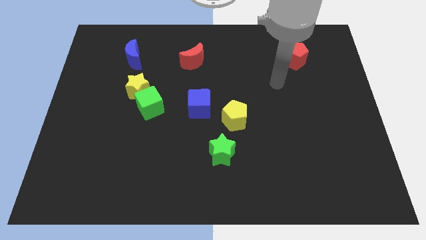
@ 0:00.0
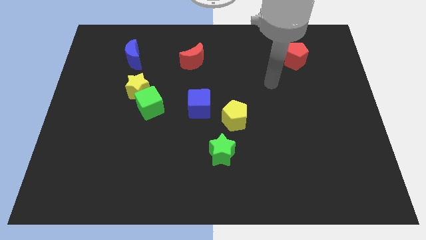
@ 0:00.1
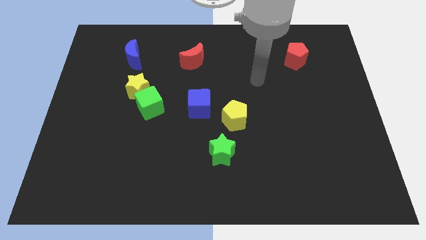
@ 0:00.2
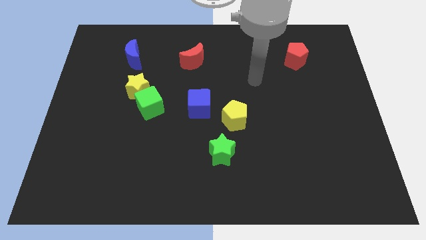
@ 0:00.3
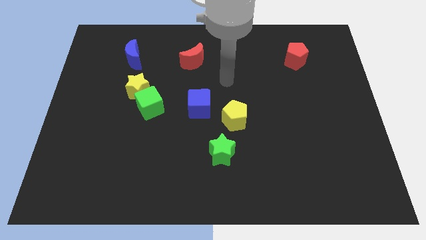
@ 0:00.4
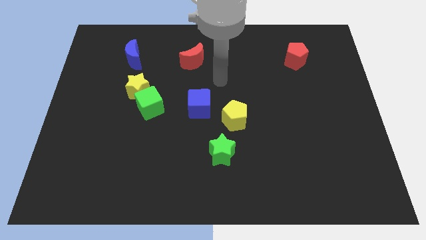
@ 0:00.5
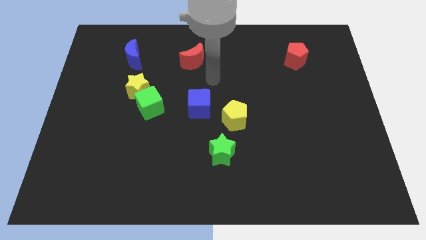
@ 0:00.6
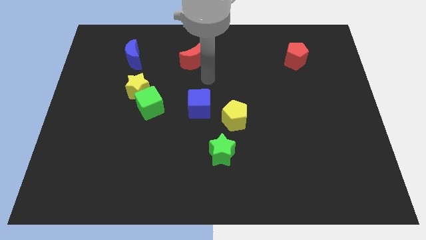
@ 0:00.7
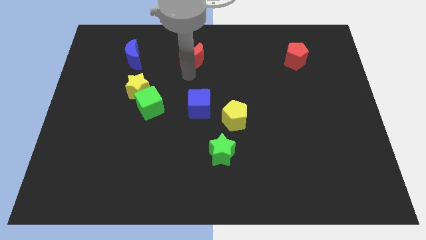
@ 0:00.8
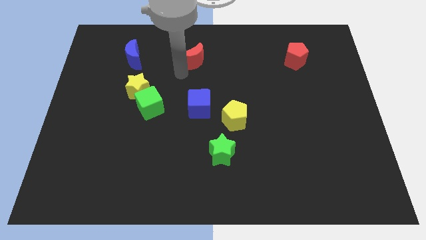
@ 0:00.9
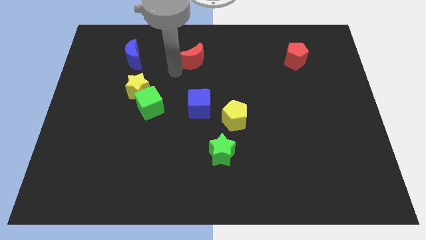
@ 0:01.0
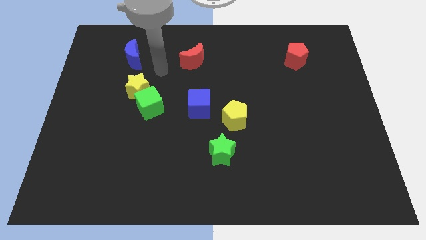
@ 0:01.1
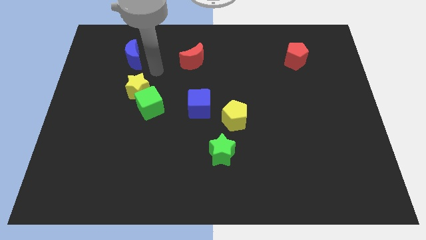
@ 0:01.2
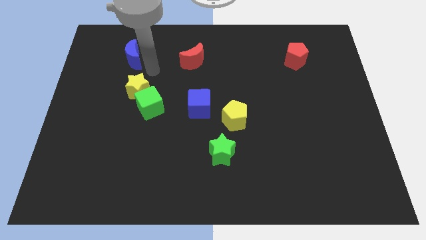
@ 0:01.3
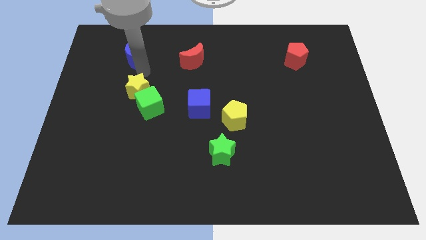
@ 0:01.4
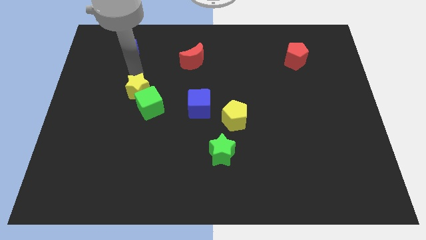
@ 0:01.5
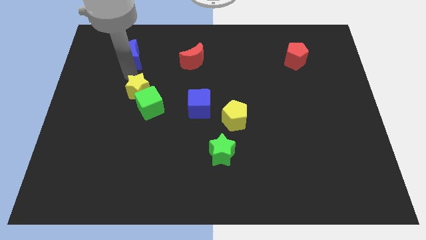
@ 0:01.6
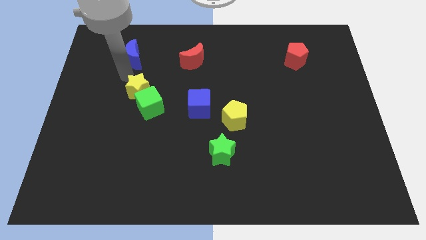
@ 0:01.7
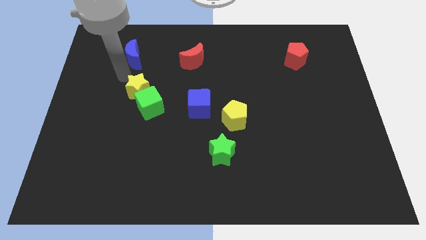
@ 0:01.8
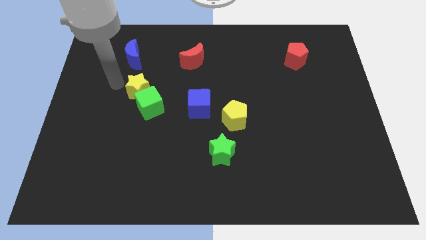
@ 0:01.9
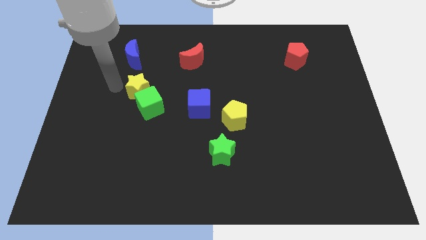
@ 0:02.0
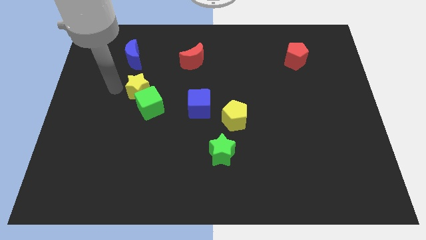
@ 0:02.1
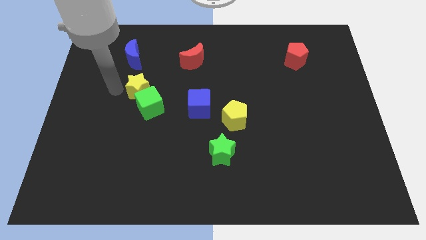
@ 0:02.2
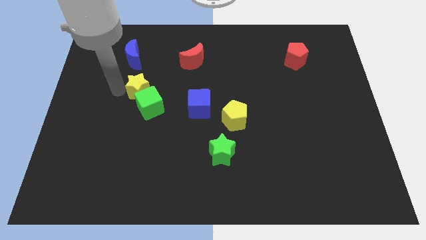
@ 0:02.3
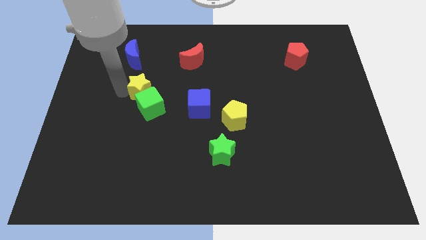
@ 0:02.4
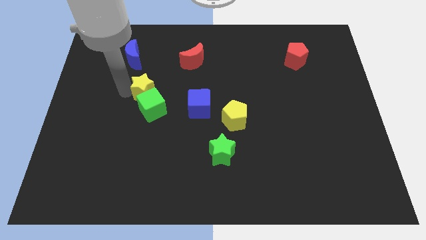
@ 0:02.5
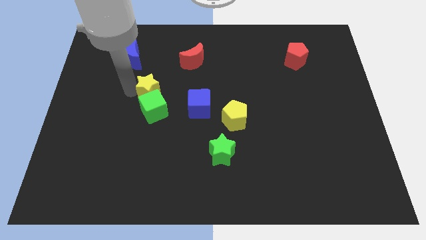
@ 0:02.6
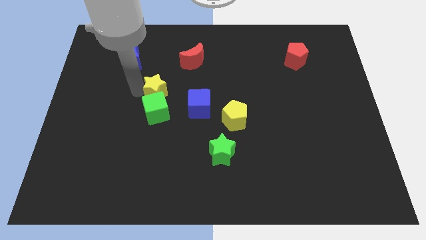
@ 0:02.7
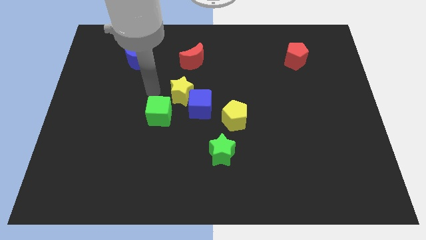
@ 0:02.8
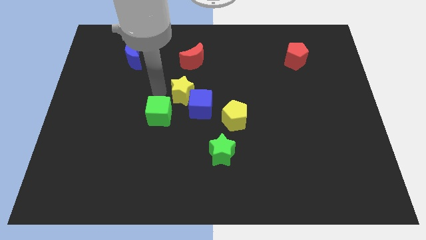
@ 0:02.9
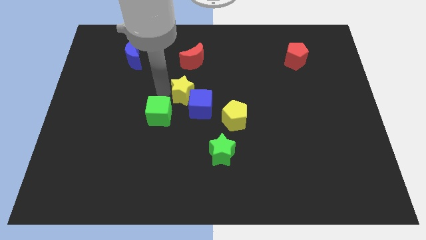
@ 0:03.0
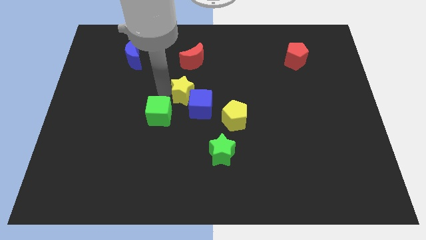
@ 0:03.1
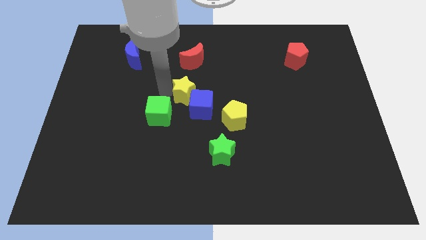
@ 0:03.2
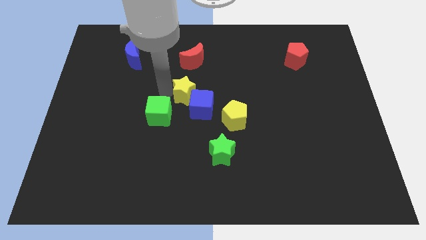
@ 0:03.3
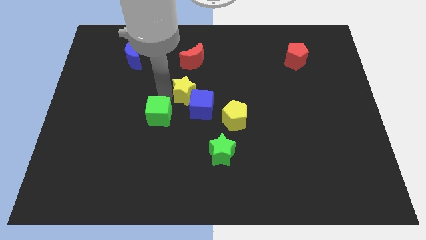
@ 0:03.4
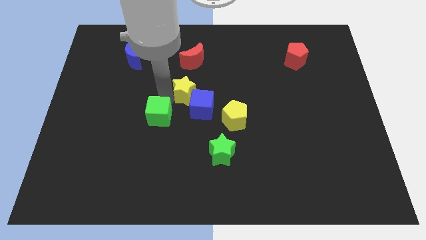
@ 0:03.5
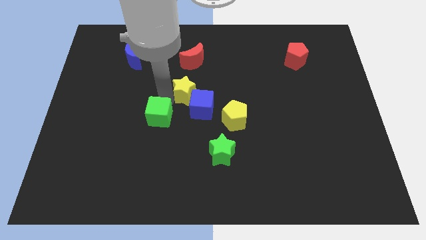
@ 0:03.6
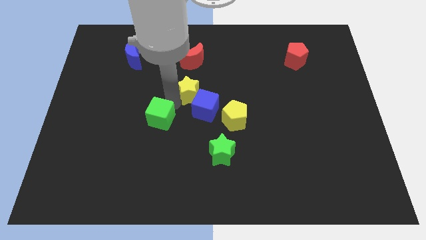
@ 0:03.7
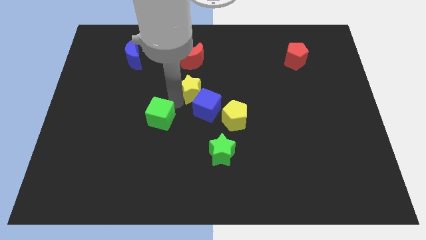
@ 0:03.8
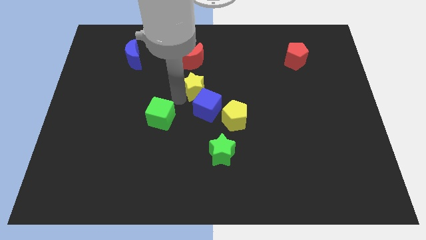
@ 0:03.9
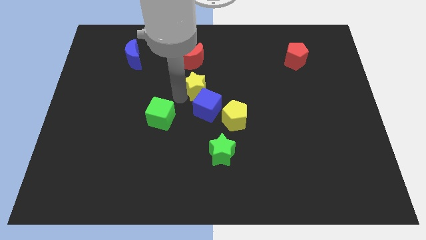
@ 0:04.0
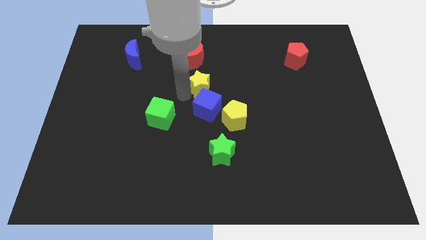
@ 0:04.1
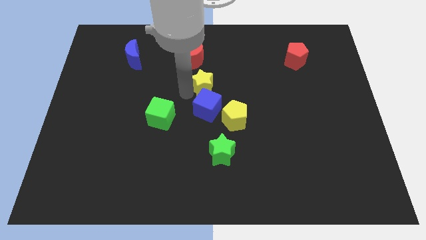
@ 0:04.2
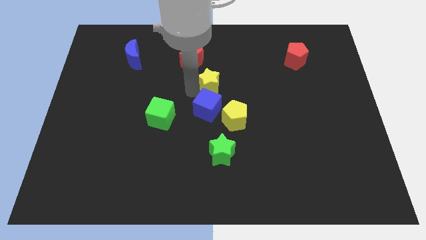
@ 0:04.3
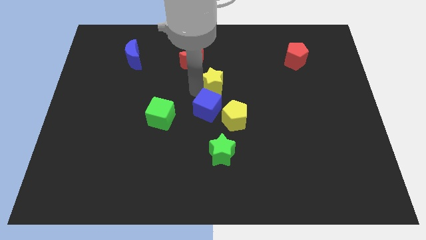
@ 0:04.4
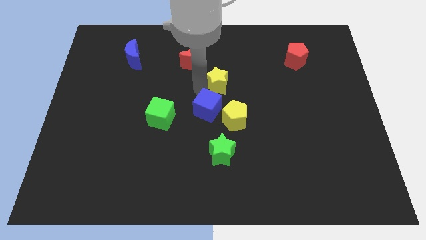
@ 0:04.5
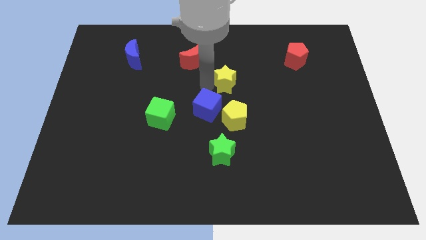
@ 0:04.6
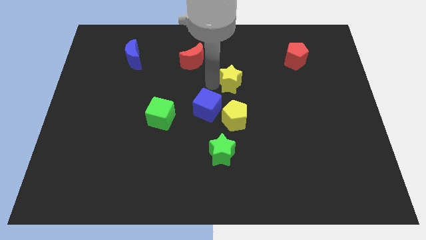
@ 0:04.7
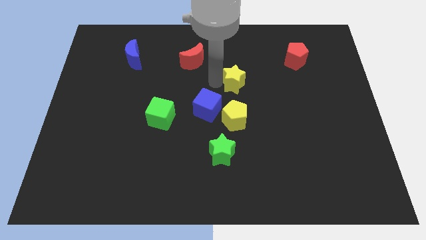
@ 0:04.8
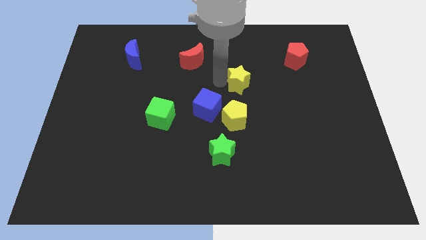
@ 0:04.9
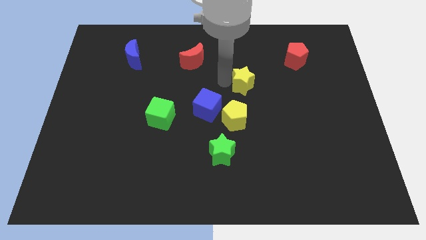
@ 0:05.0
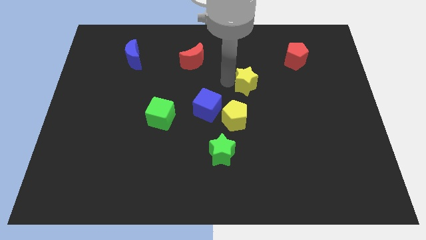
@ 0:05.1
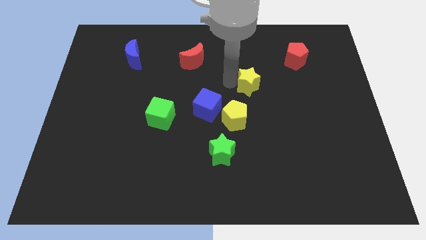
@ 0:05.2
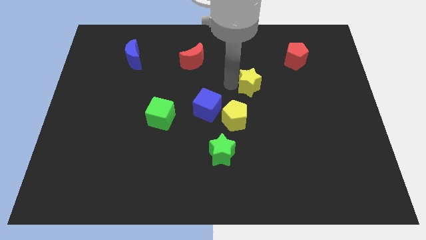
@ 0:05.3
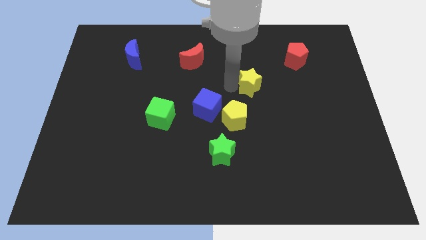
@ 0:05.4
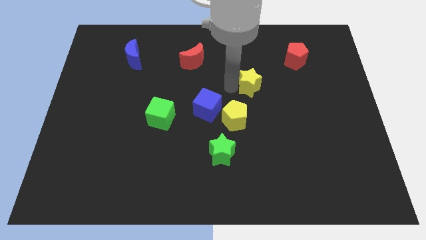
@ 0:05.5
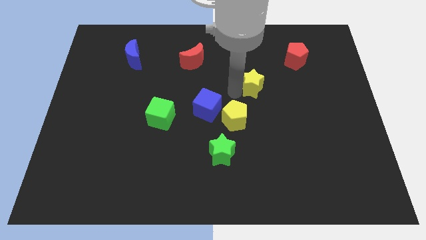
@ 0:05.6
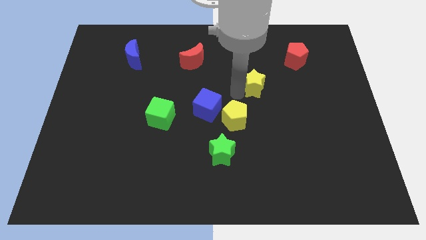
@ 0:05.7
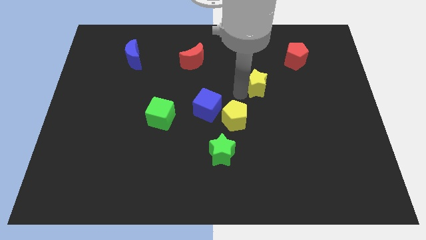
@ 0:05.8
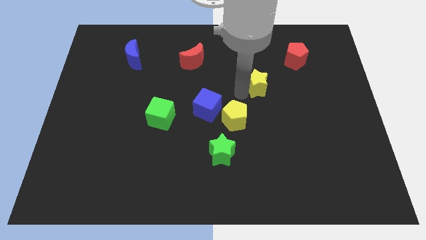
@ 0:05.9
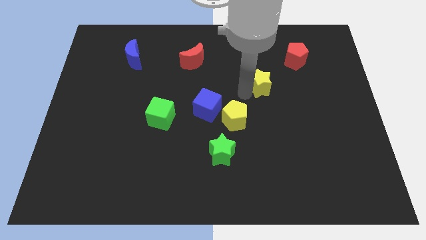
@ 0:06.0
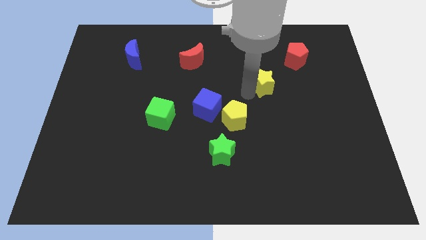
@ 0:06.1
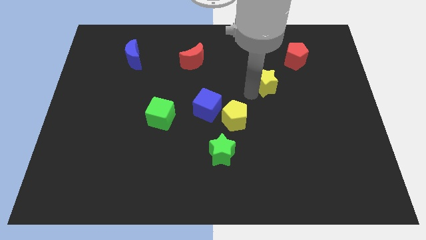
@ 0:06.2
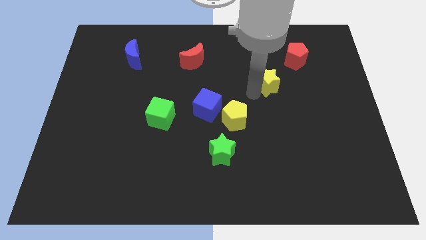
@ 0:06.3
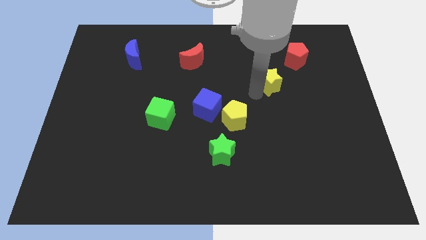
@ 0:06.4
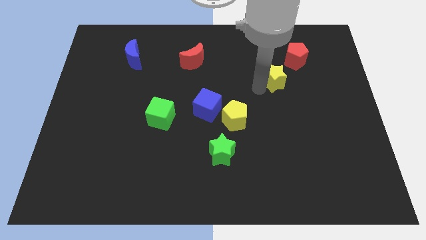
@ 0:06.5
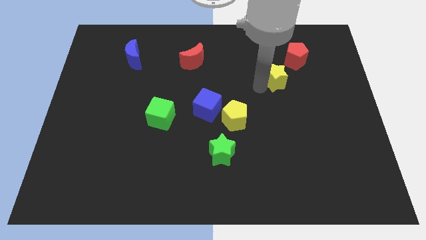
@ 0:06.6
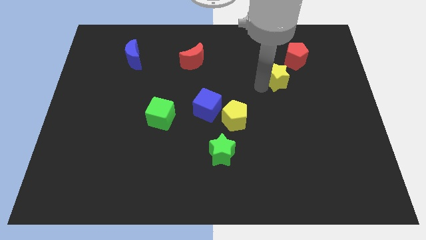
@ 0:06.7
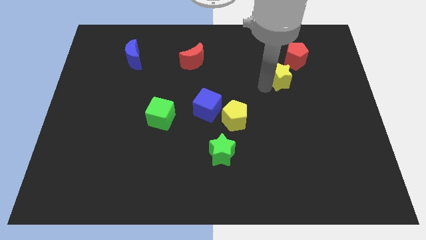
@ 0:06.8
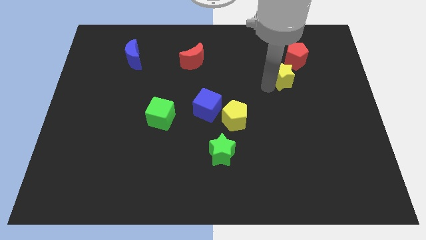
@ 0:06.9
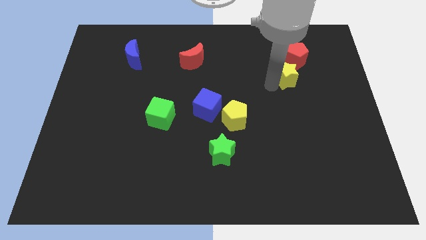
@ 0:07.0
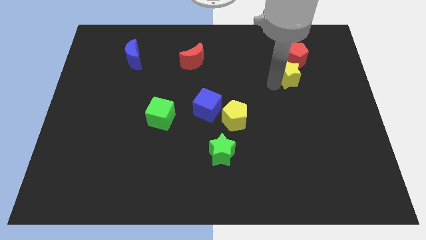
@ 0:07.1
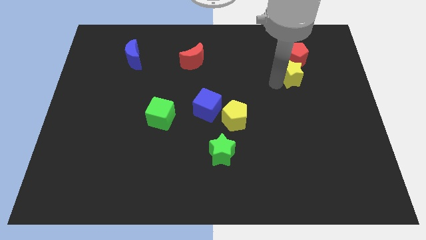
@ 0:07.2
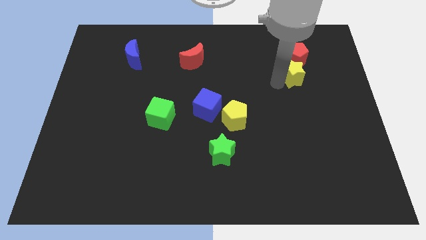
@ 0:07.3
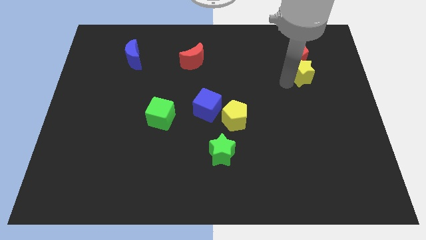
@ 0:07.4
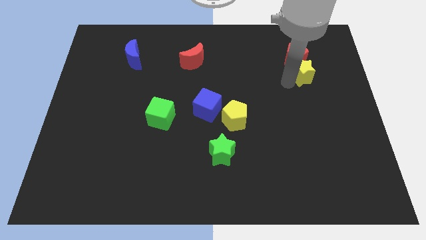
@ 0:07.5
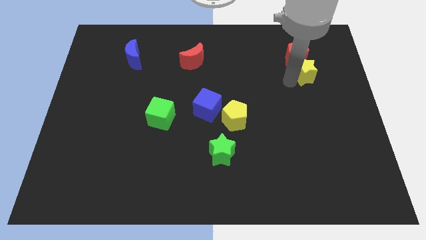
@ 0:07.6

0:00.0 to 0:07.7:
slide the yellow star close to the red pentagon

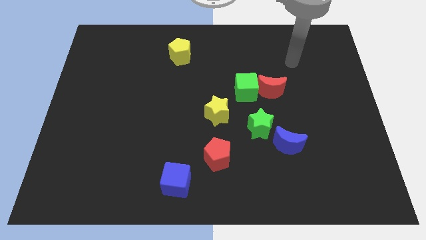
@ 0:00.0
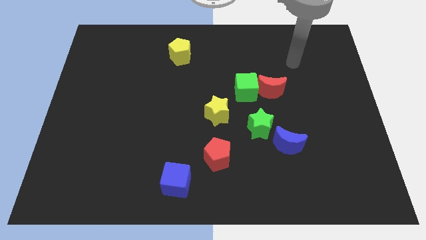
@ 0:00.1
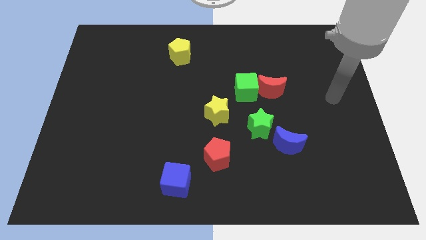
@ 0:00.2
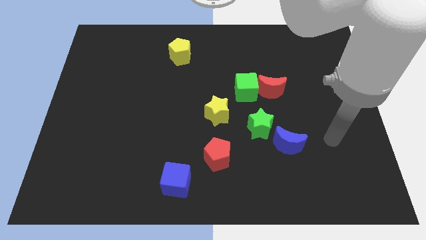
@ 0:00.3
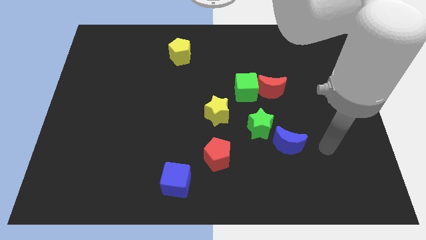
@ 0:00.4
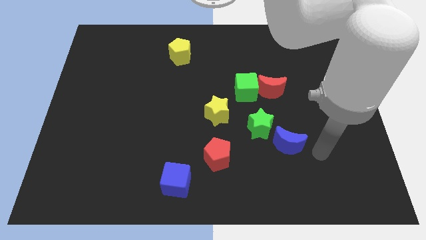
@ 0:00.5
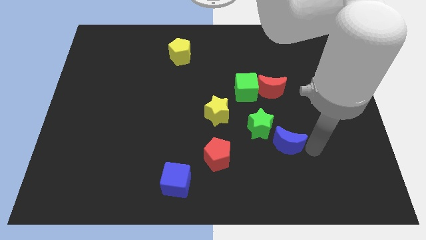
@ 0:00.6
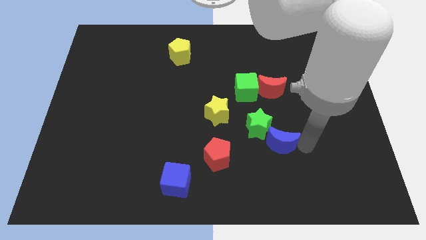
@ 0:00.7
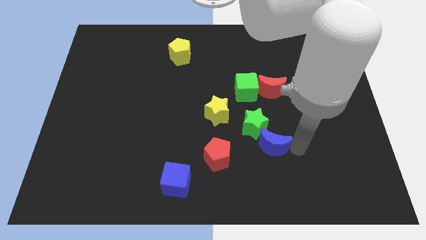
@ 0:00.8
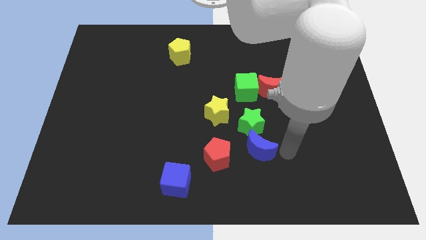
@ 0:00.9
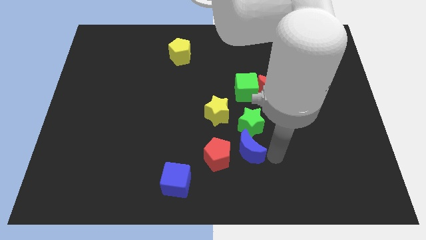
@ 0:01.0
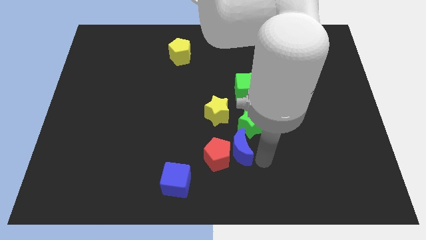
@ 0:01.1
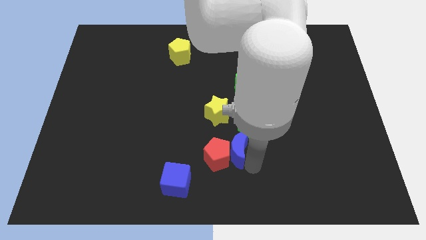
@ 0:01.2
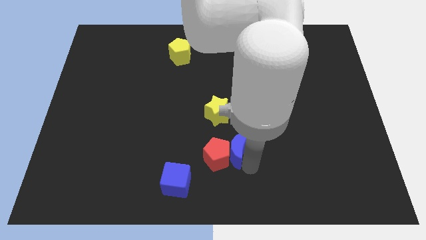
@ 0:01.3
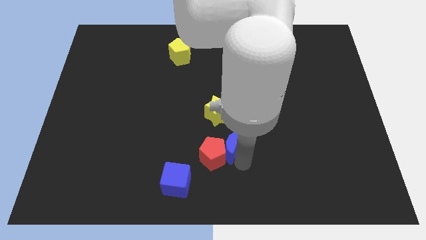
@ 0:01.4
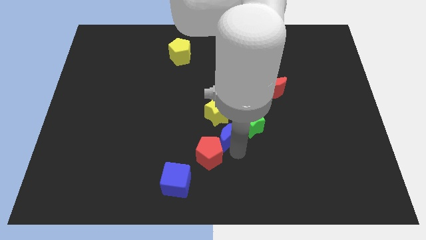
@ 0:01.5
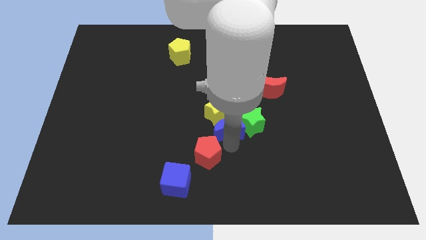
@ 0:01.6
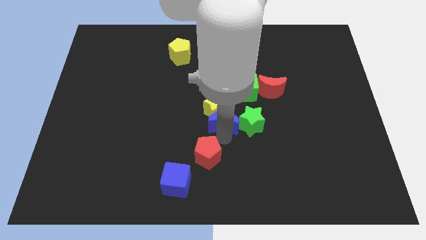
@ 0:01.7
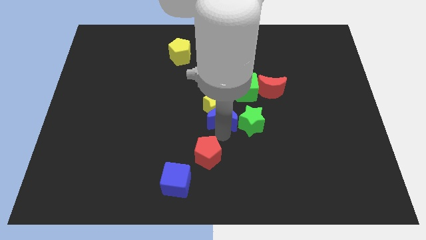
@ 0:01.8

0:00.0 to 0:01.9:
slide the blue moon close to the yellow star
